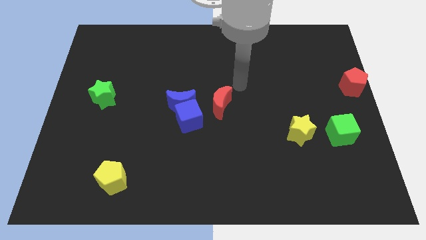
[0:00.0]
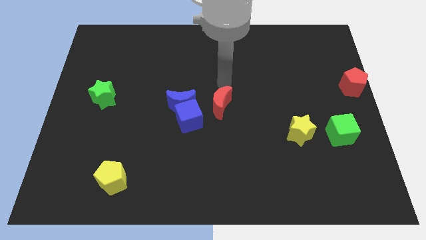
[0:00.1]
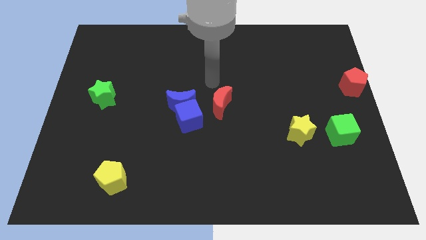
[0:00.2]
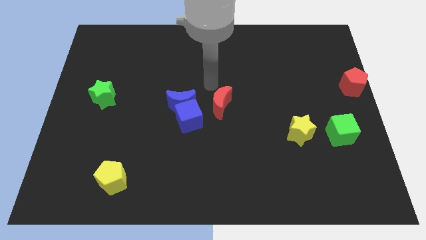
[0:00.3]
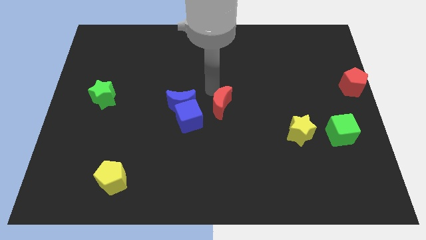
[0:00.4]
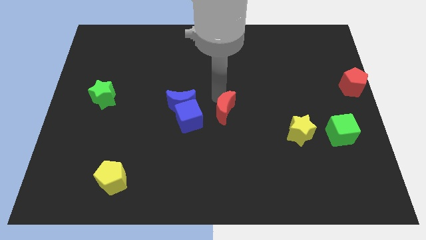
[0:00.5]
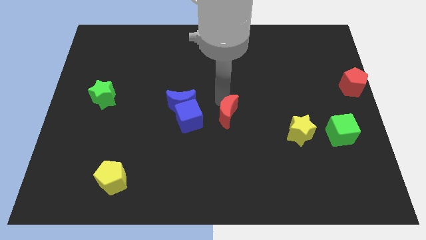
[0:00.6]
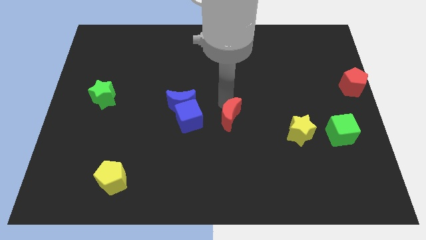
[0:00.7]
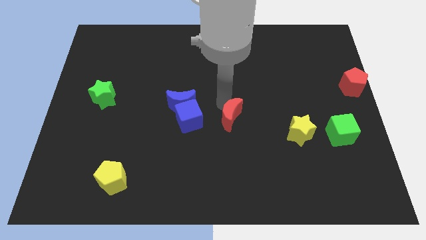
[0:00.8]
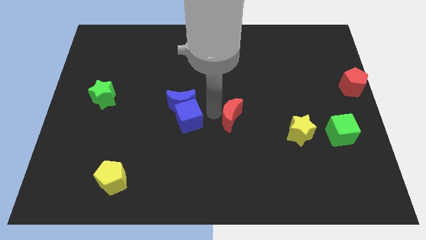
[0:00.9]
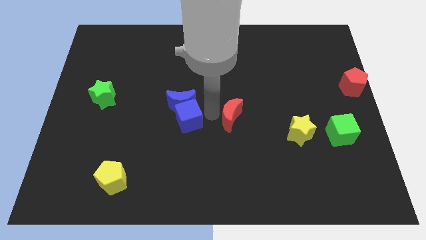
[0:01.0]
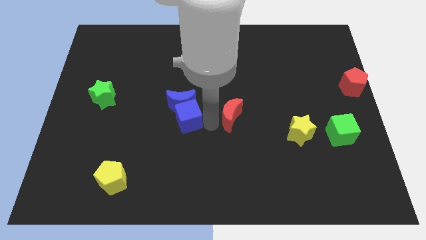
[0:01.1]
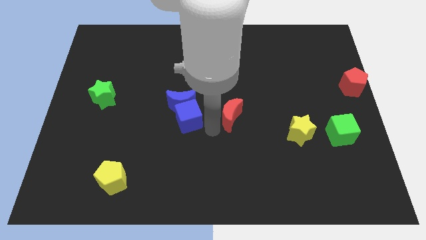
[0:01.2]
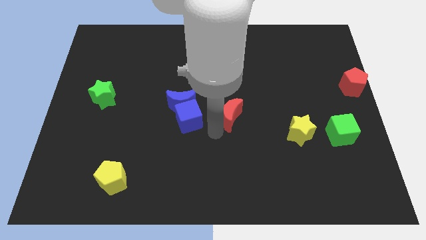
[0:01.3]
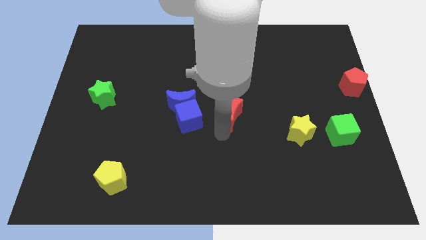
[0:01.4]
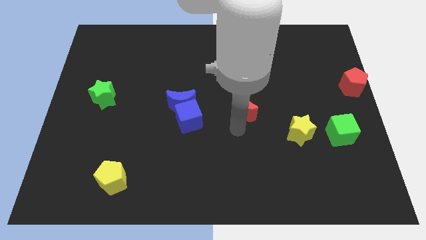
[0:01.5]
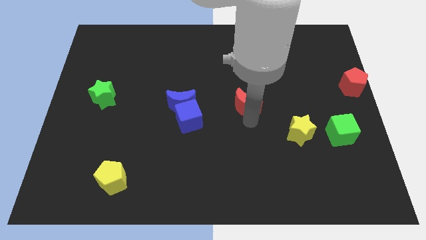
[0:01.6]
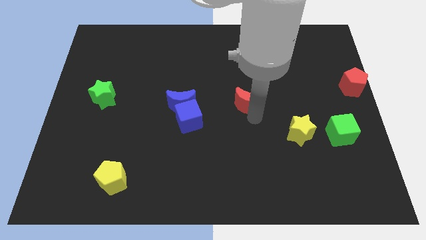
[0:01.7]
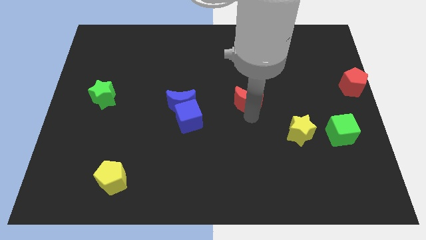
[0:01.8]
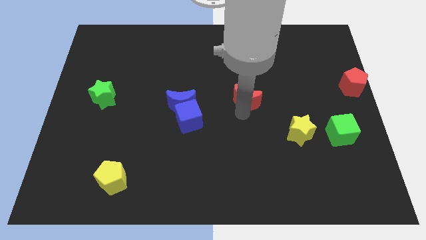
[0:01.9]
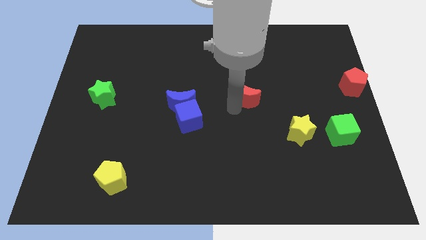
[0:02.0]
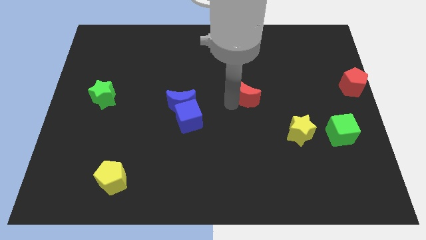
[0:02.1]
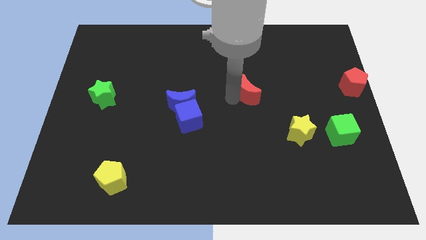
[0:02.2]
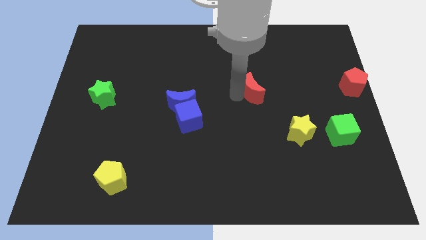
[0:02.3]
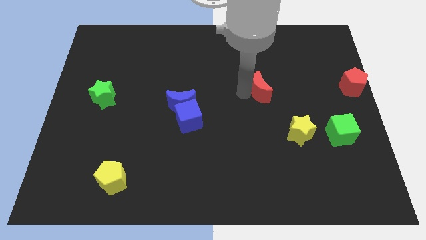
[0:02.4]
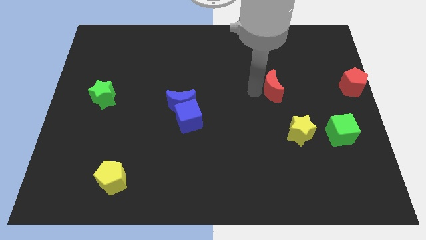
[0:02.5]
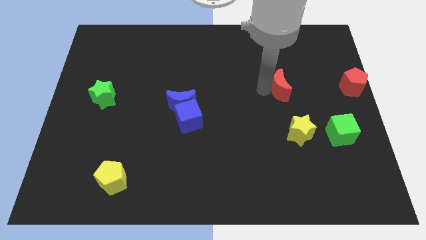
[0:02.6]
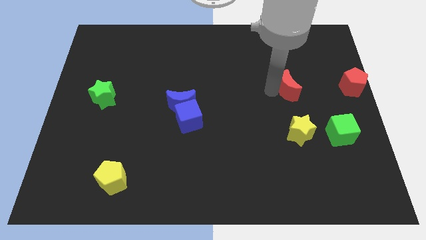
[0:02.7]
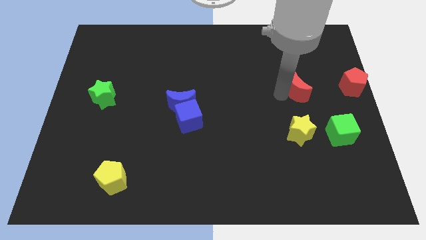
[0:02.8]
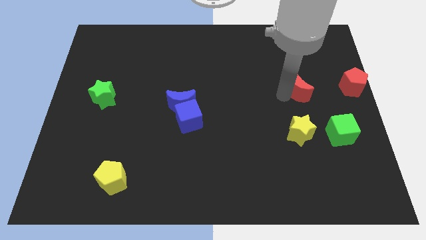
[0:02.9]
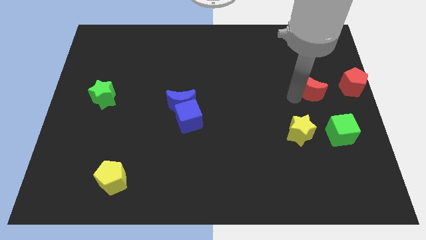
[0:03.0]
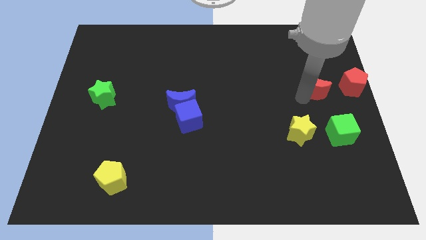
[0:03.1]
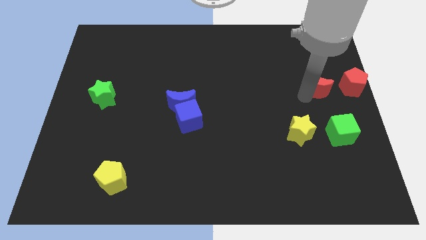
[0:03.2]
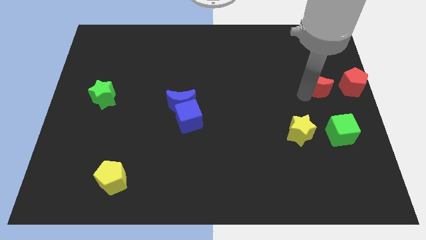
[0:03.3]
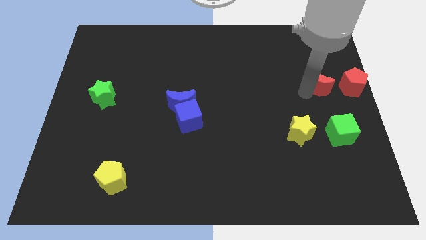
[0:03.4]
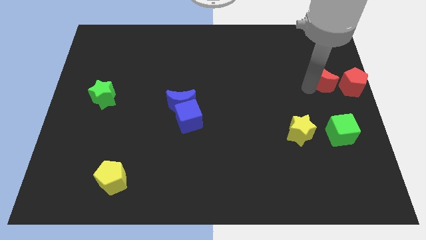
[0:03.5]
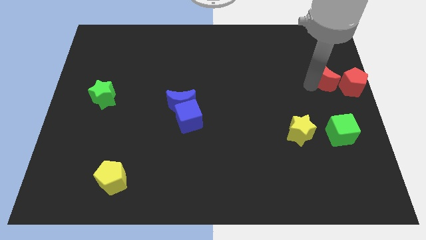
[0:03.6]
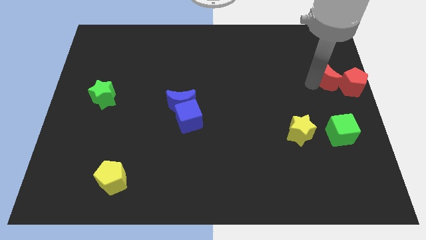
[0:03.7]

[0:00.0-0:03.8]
push the red crescent left to the red pentagon

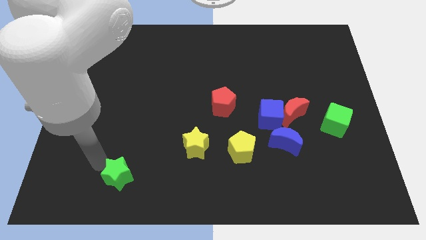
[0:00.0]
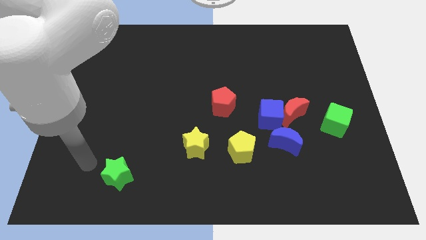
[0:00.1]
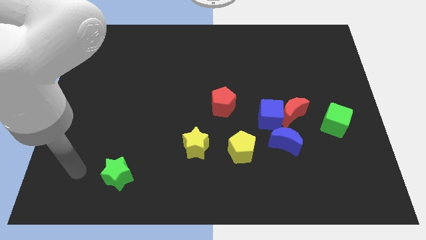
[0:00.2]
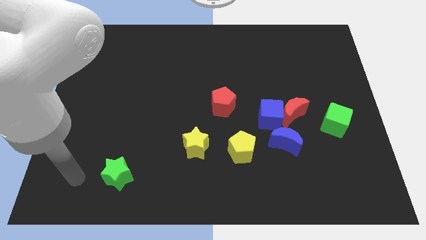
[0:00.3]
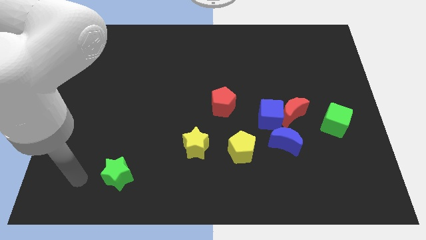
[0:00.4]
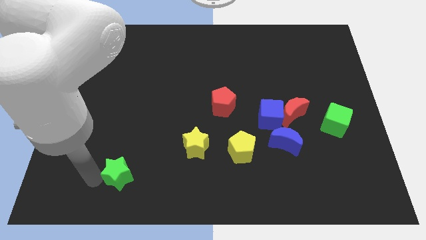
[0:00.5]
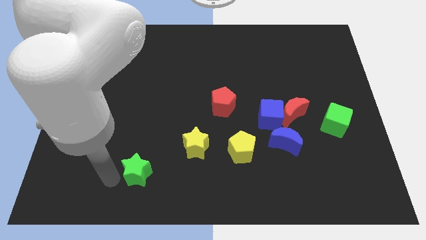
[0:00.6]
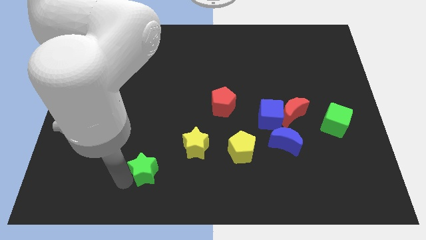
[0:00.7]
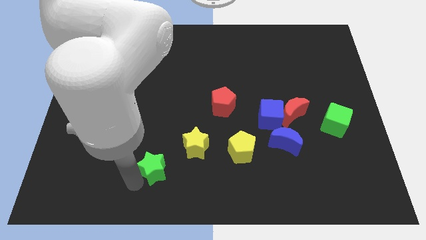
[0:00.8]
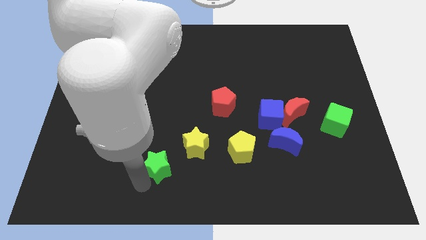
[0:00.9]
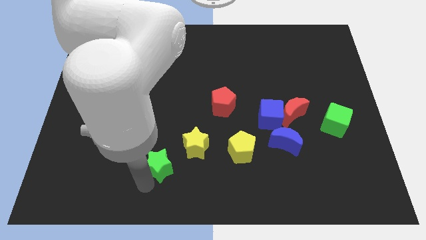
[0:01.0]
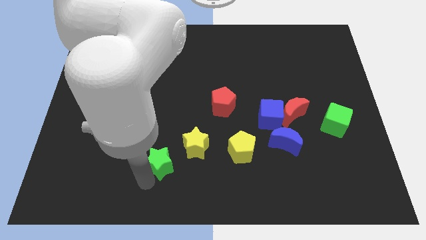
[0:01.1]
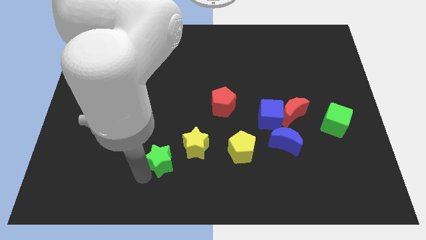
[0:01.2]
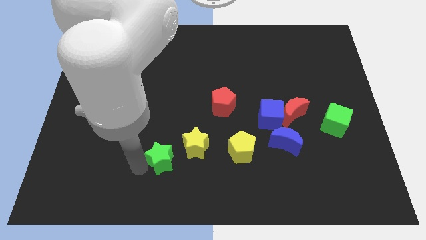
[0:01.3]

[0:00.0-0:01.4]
push the green star towards the bottom left side of the yellow star

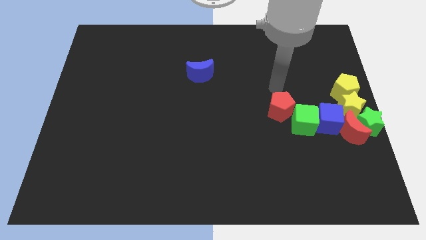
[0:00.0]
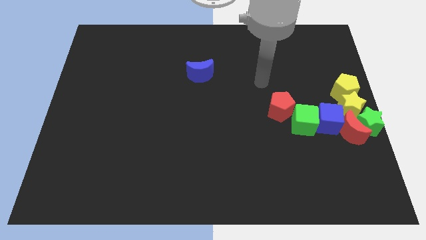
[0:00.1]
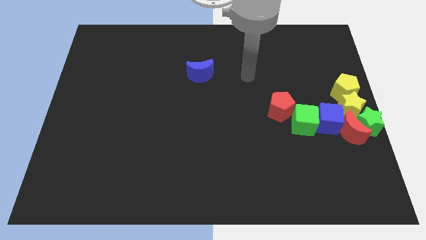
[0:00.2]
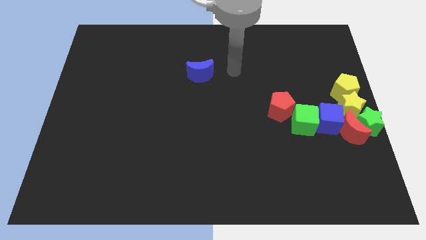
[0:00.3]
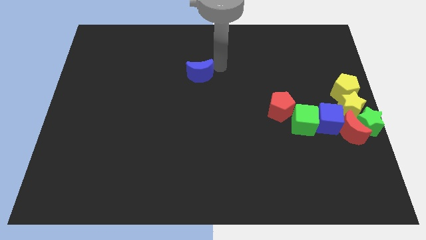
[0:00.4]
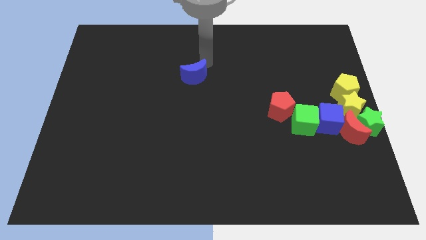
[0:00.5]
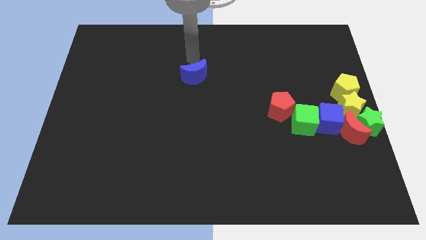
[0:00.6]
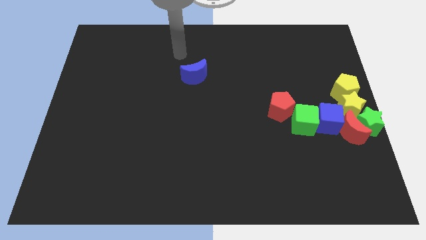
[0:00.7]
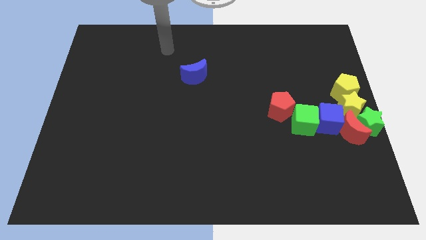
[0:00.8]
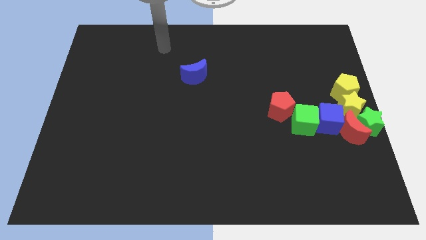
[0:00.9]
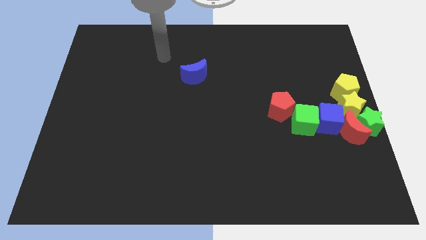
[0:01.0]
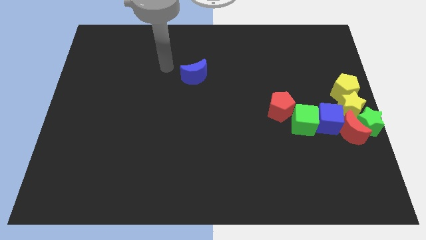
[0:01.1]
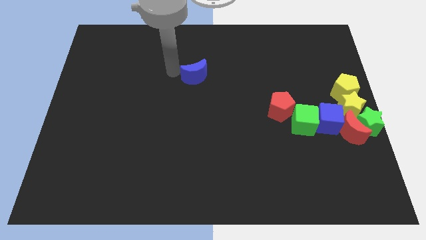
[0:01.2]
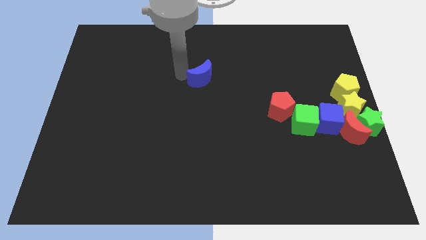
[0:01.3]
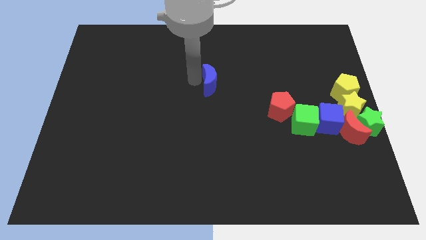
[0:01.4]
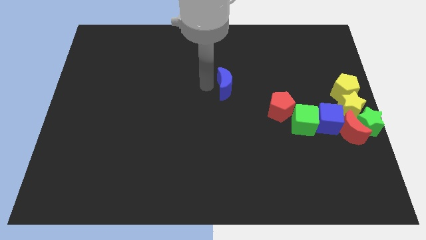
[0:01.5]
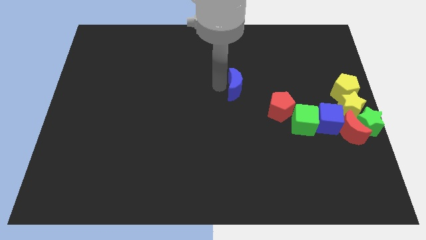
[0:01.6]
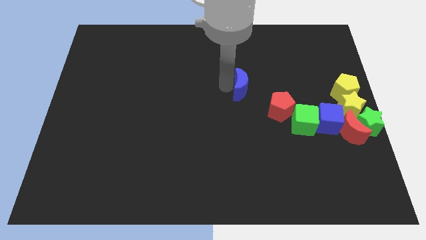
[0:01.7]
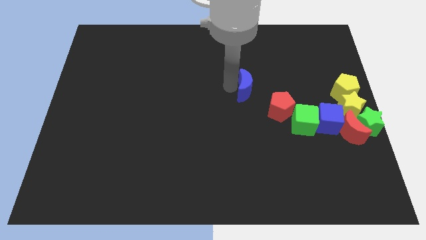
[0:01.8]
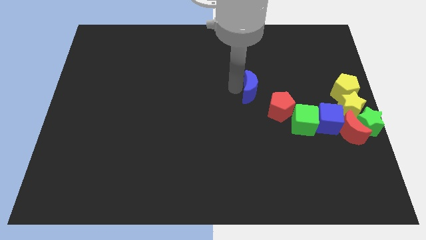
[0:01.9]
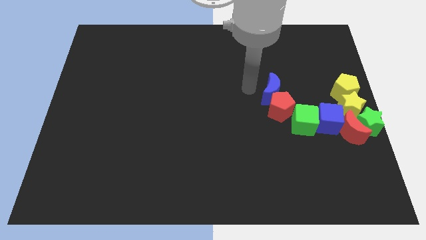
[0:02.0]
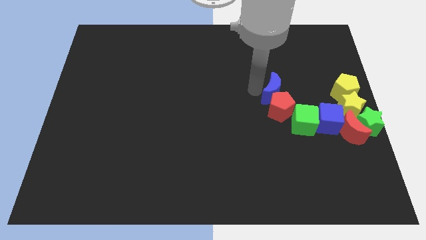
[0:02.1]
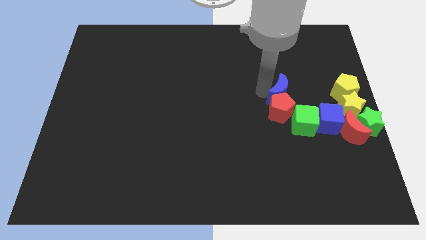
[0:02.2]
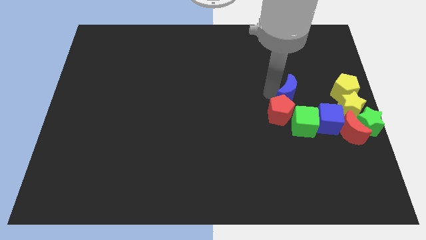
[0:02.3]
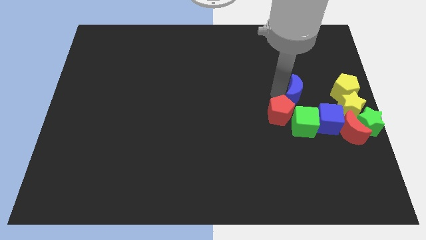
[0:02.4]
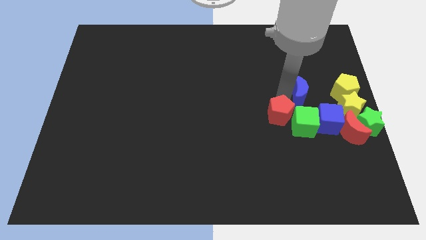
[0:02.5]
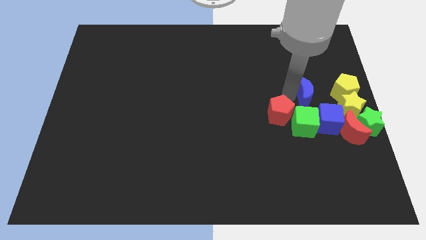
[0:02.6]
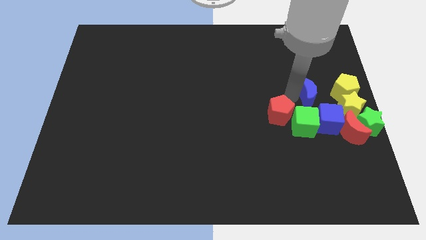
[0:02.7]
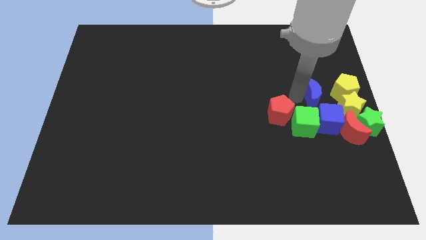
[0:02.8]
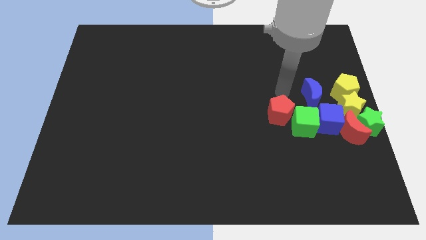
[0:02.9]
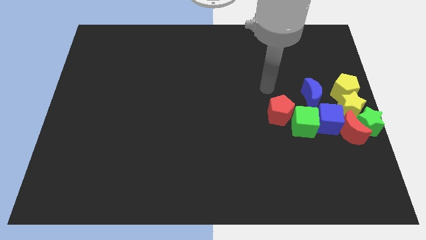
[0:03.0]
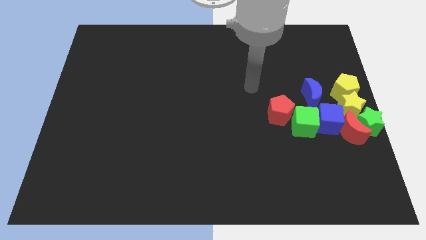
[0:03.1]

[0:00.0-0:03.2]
move blue moon left above the blue cube

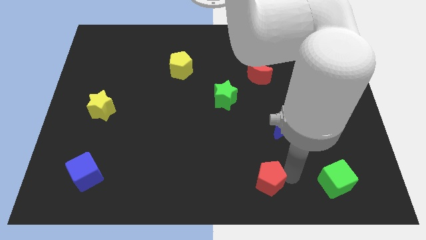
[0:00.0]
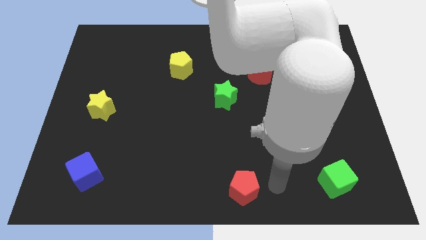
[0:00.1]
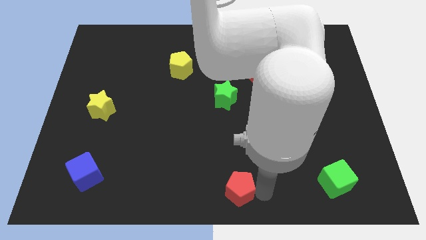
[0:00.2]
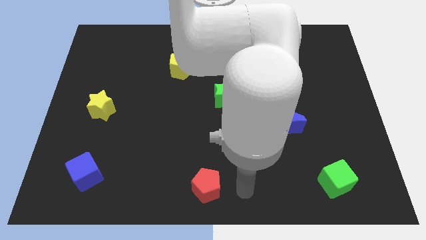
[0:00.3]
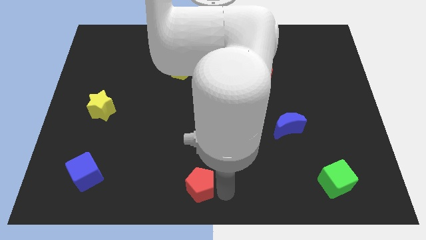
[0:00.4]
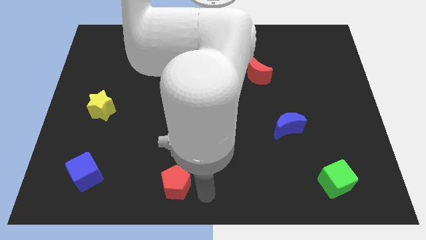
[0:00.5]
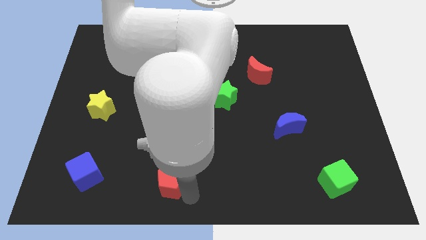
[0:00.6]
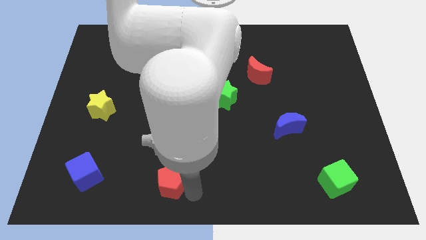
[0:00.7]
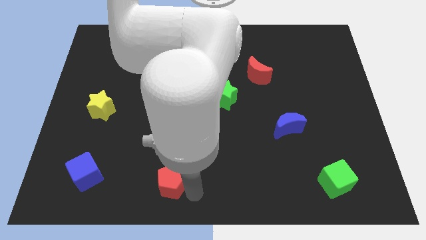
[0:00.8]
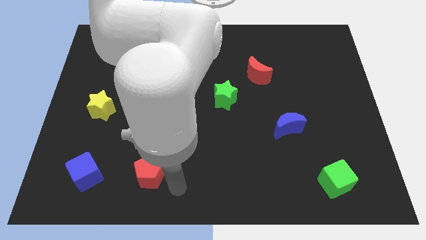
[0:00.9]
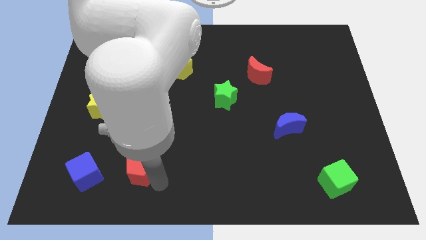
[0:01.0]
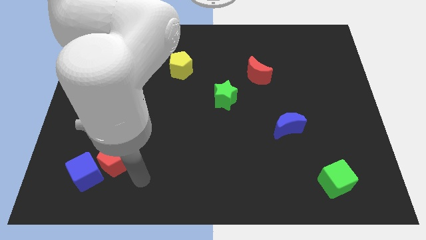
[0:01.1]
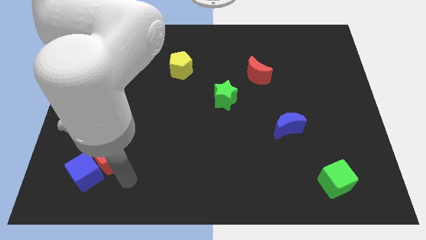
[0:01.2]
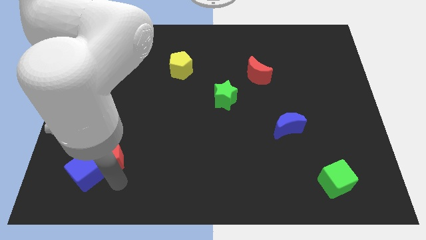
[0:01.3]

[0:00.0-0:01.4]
push the red pentagon into the top right side of the blue cube
